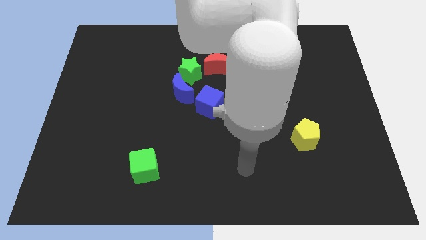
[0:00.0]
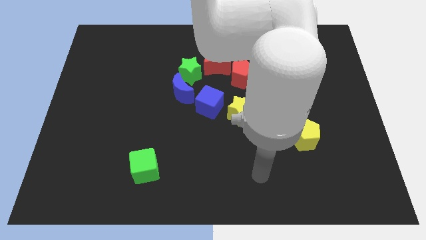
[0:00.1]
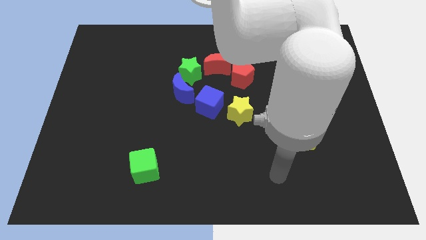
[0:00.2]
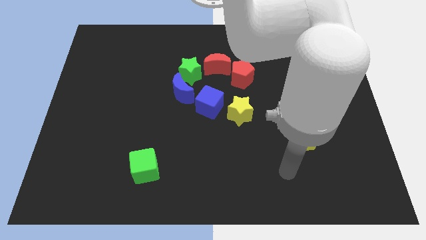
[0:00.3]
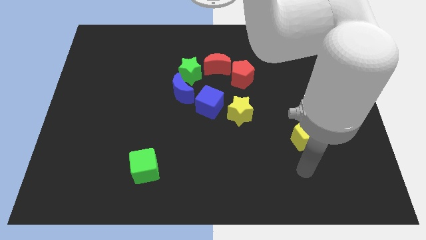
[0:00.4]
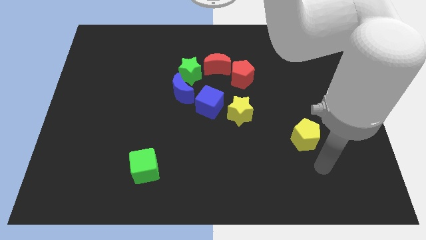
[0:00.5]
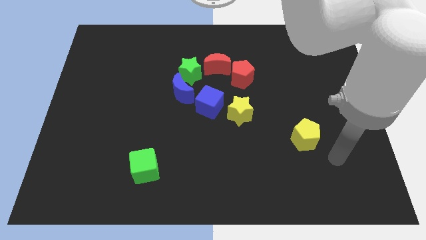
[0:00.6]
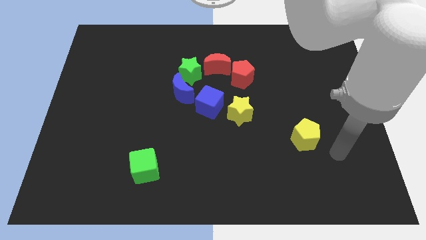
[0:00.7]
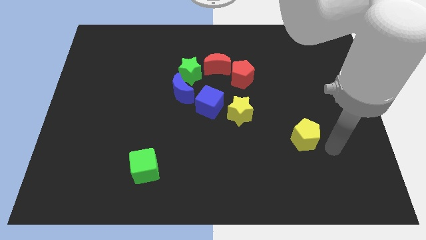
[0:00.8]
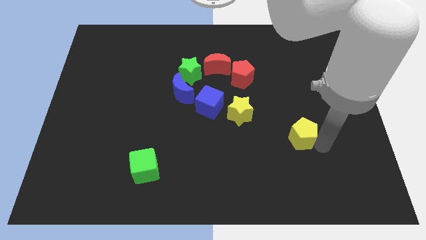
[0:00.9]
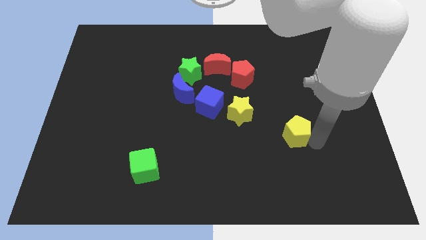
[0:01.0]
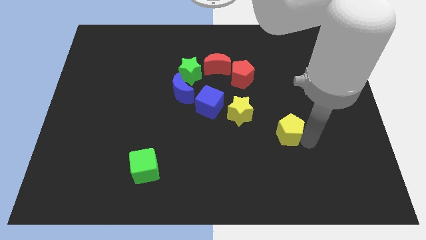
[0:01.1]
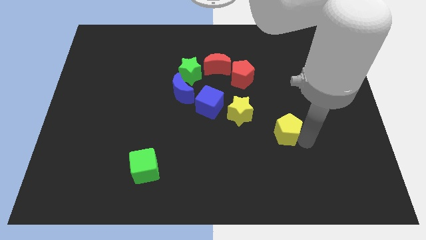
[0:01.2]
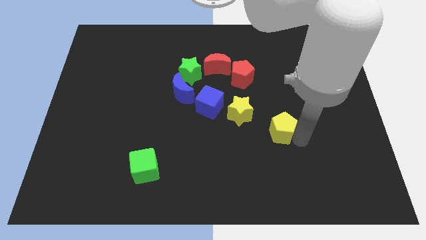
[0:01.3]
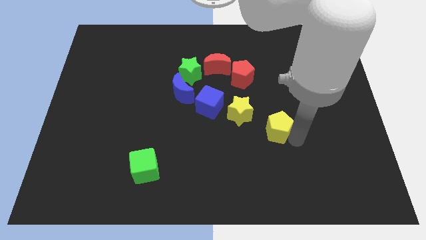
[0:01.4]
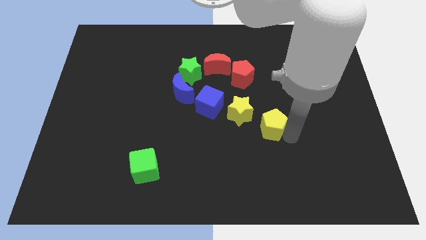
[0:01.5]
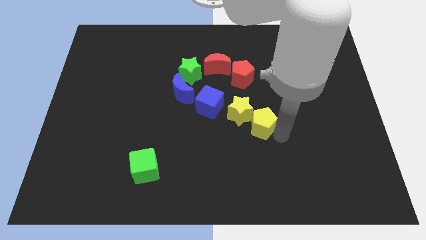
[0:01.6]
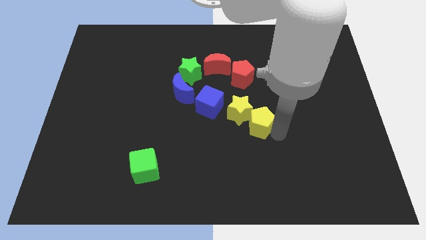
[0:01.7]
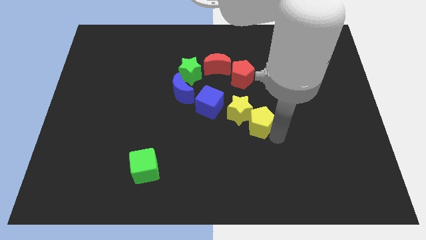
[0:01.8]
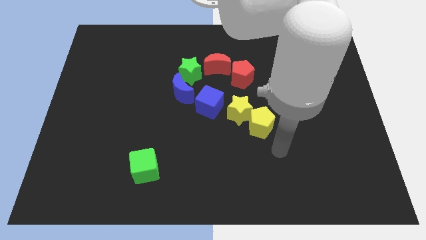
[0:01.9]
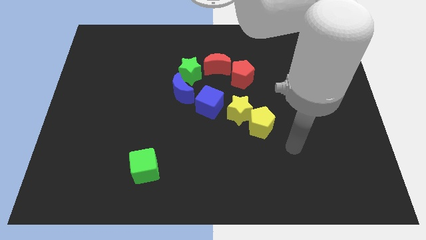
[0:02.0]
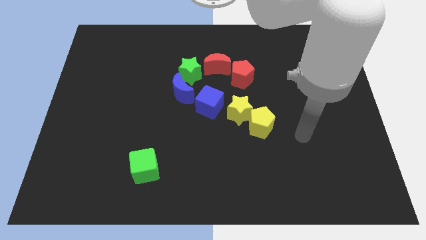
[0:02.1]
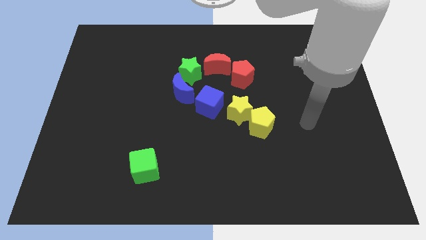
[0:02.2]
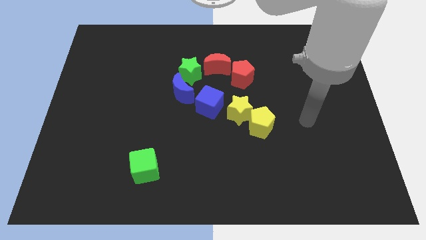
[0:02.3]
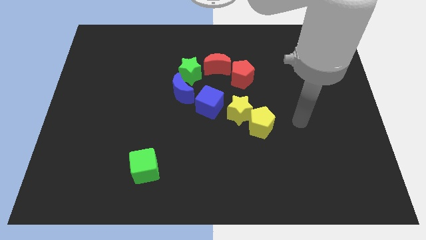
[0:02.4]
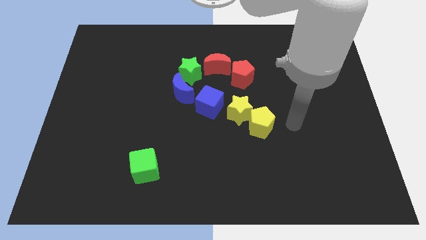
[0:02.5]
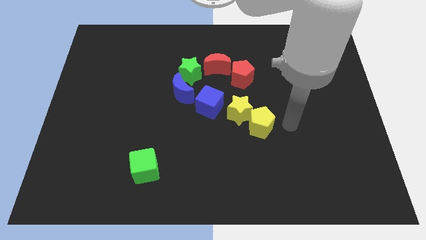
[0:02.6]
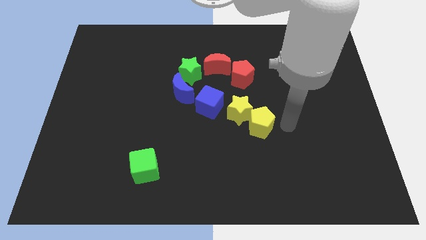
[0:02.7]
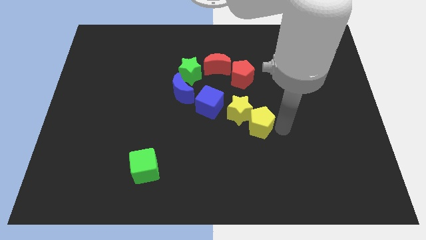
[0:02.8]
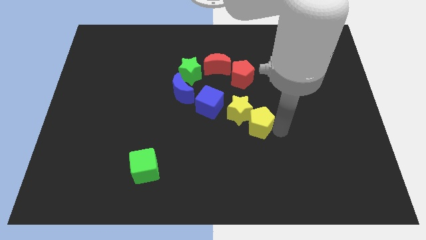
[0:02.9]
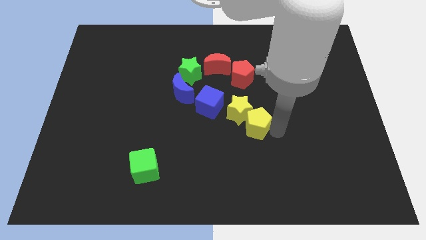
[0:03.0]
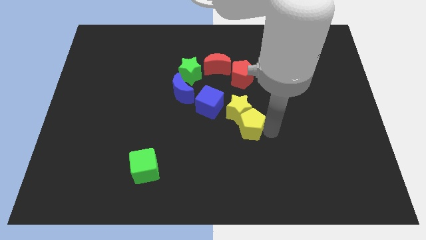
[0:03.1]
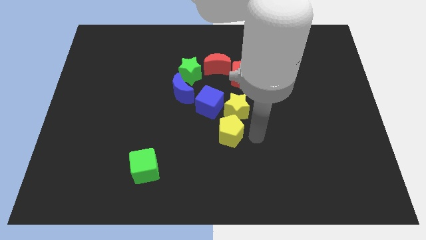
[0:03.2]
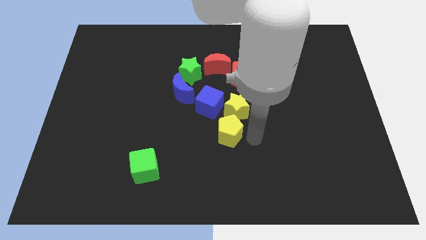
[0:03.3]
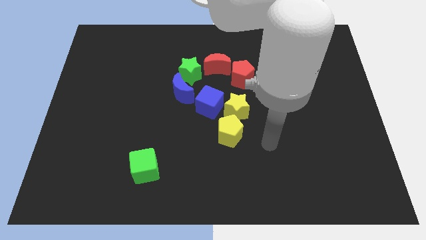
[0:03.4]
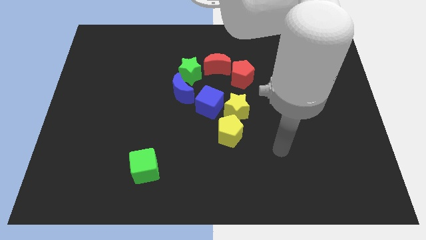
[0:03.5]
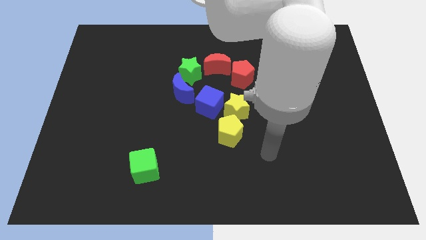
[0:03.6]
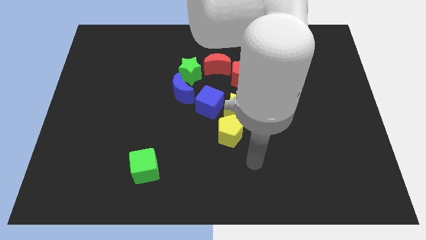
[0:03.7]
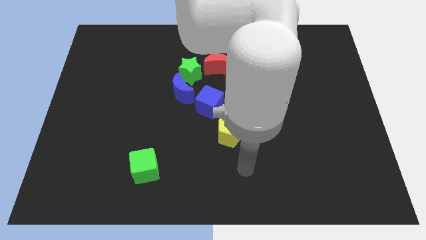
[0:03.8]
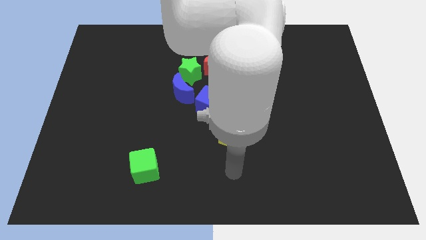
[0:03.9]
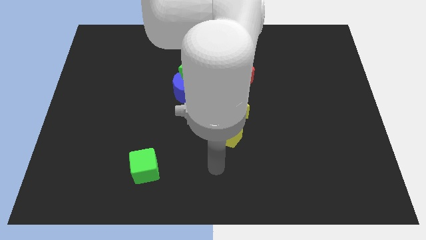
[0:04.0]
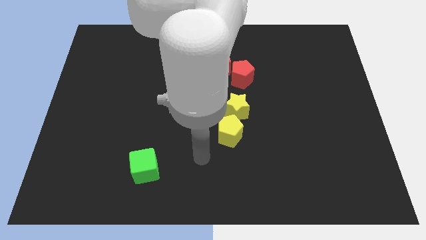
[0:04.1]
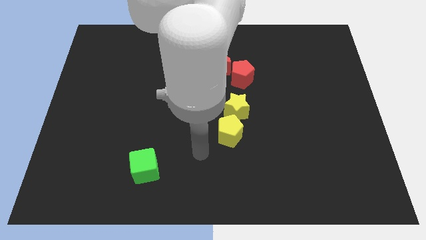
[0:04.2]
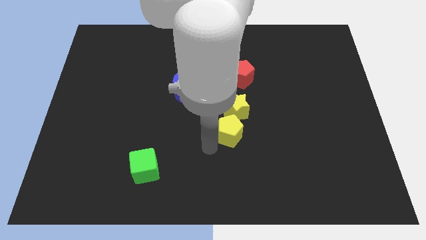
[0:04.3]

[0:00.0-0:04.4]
place the yellow pentagon below the yellow star

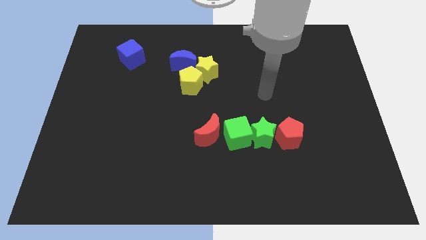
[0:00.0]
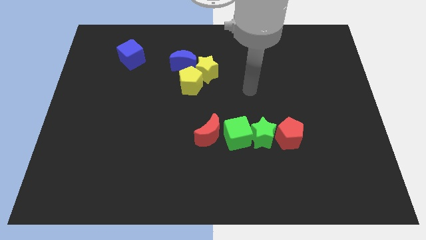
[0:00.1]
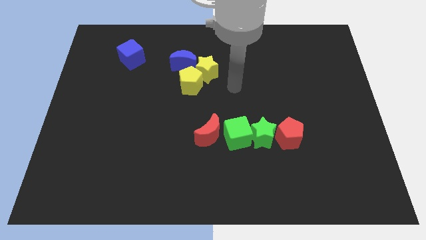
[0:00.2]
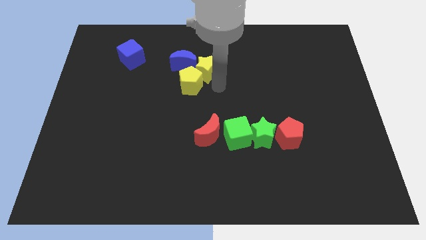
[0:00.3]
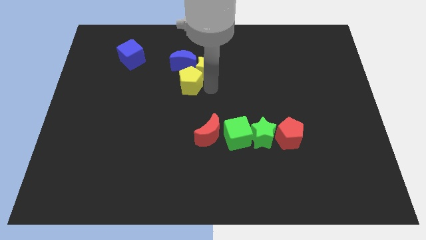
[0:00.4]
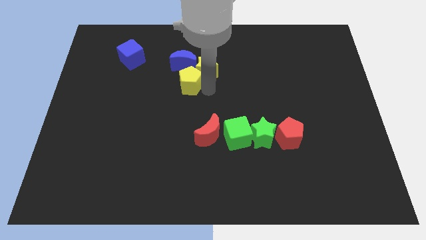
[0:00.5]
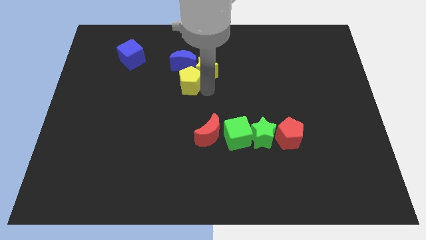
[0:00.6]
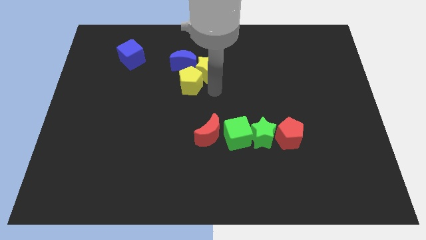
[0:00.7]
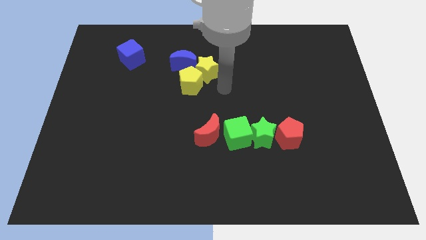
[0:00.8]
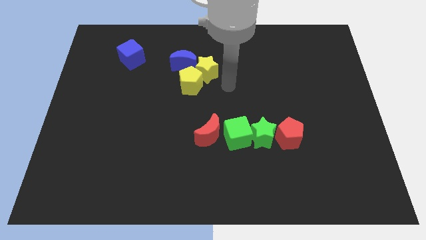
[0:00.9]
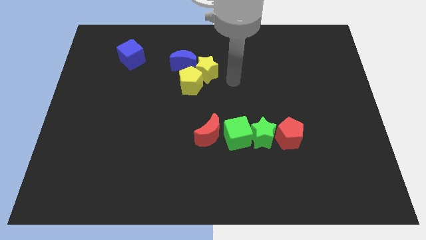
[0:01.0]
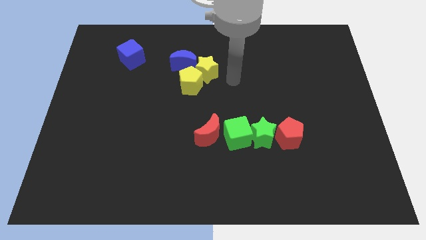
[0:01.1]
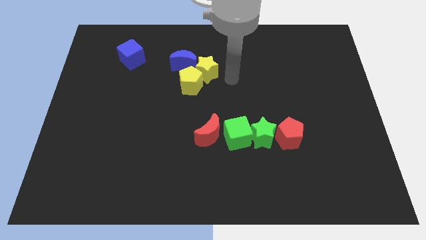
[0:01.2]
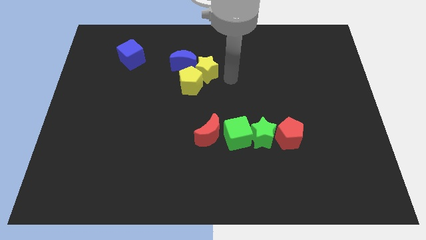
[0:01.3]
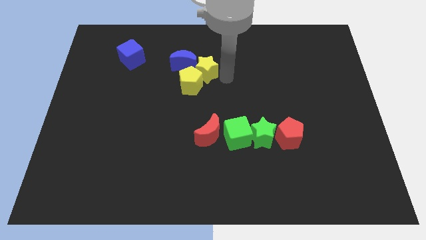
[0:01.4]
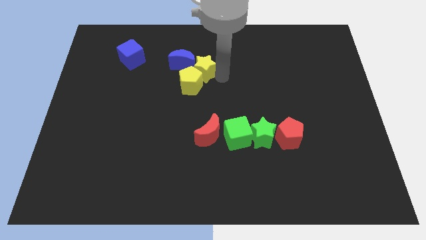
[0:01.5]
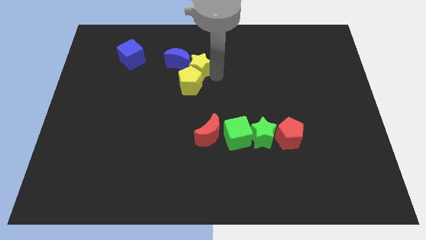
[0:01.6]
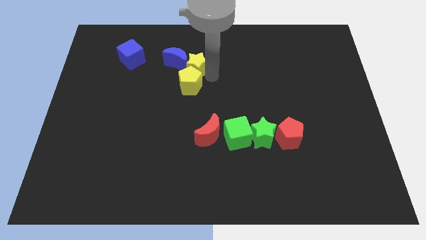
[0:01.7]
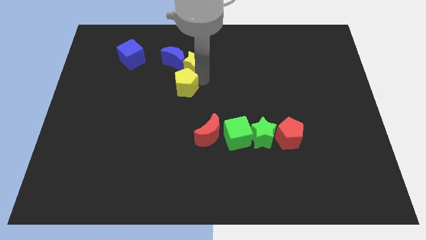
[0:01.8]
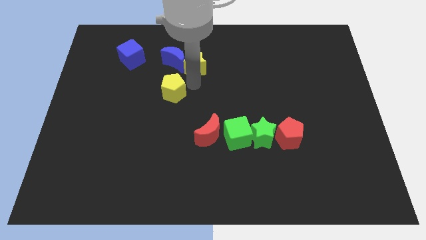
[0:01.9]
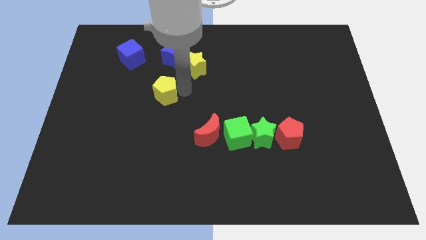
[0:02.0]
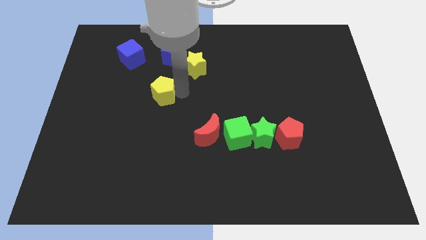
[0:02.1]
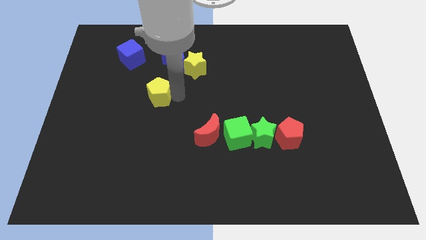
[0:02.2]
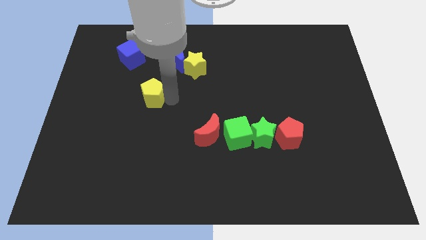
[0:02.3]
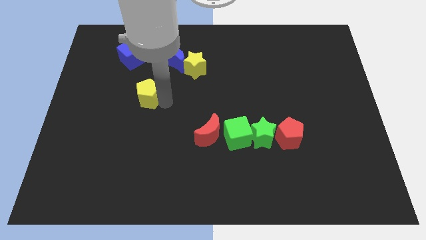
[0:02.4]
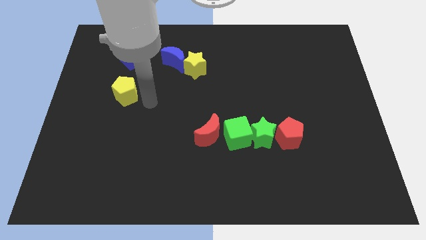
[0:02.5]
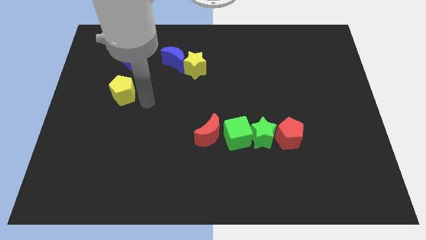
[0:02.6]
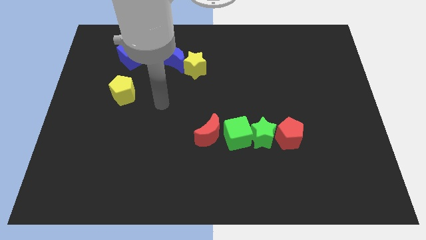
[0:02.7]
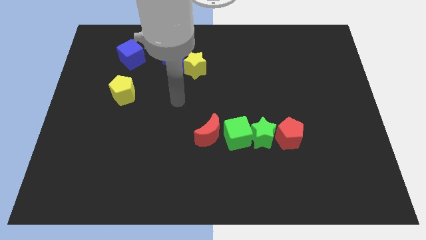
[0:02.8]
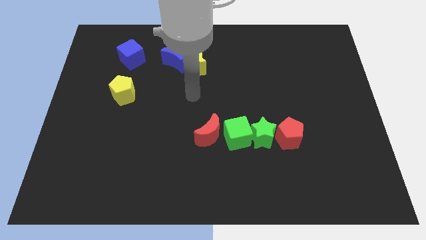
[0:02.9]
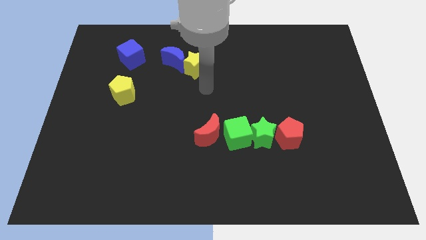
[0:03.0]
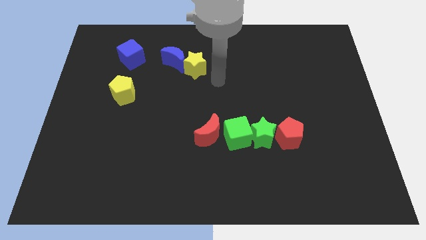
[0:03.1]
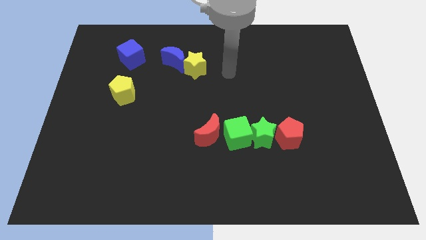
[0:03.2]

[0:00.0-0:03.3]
move the yellow pentagon away from the yellow star

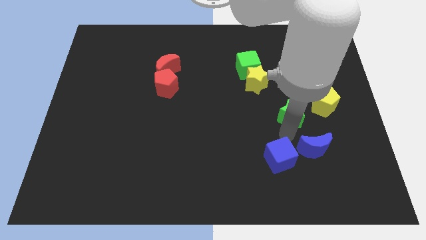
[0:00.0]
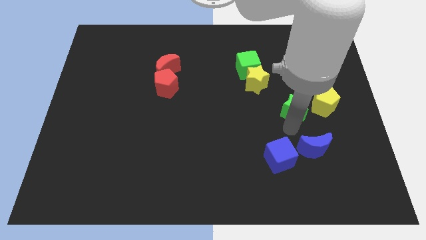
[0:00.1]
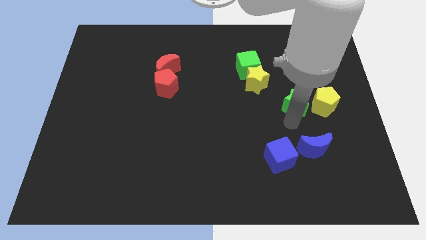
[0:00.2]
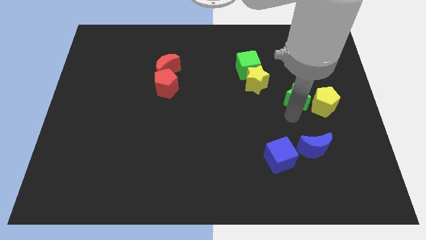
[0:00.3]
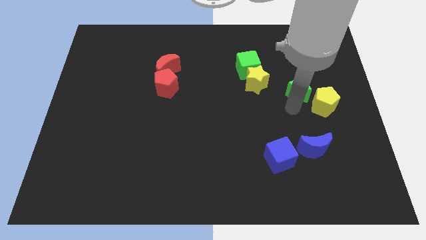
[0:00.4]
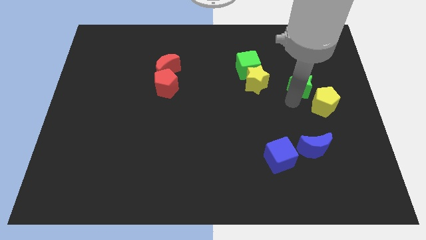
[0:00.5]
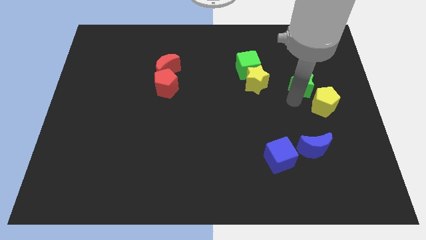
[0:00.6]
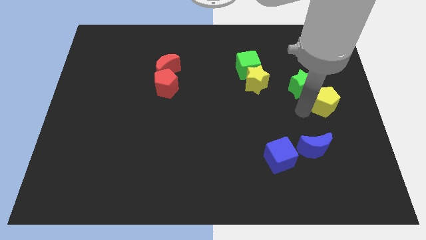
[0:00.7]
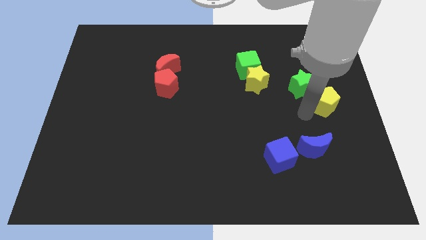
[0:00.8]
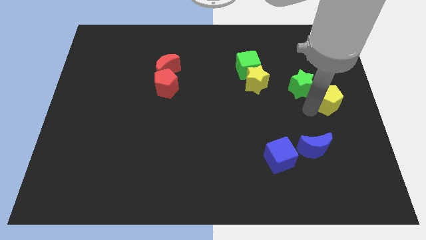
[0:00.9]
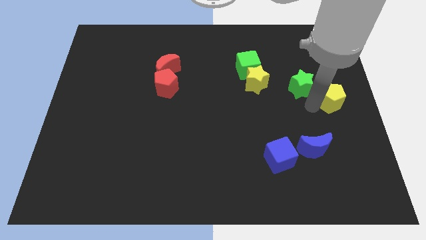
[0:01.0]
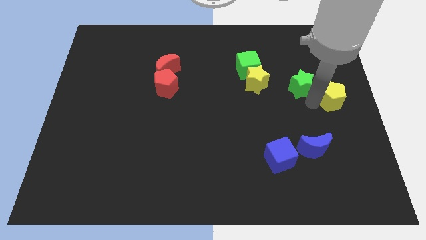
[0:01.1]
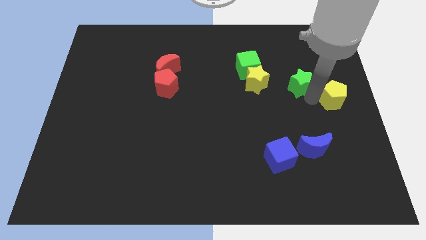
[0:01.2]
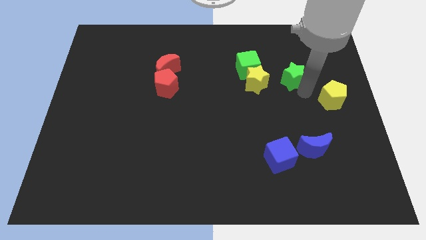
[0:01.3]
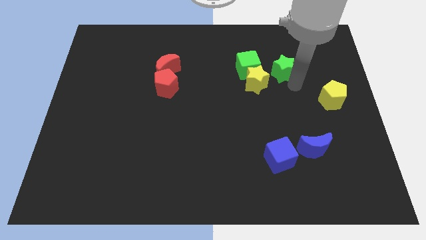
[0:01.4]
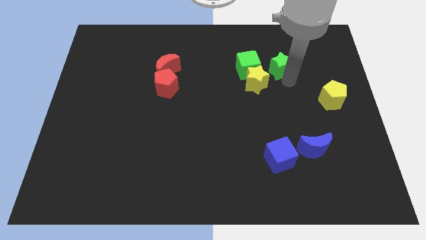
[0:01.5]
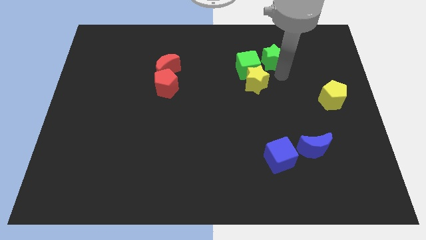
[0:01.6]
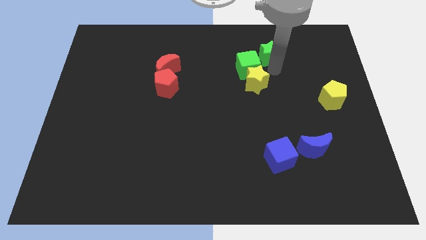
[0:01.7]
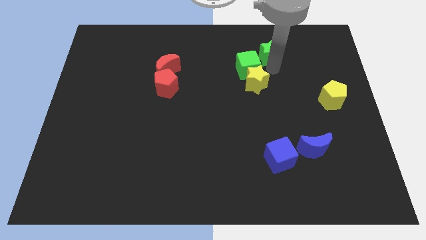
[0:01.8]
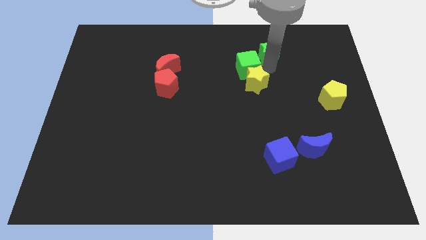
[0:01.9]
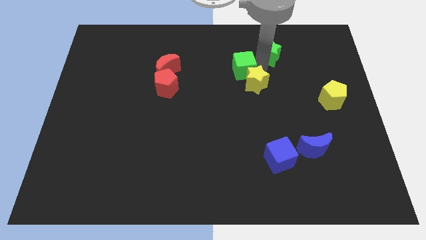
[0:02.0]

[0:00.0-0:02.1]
place the green star right to the green cube
